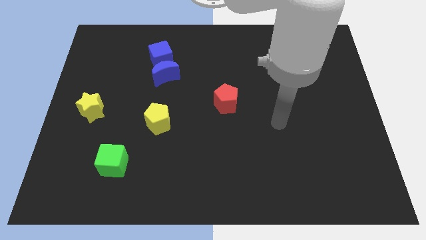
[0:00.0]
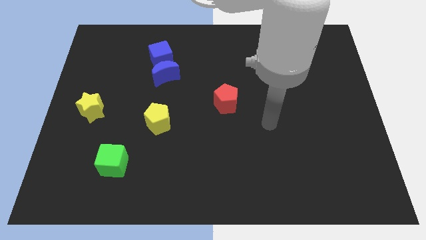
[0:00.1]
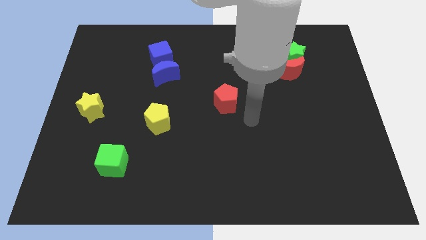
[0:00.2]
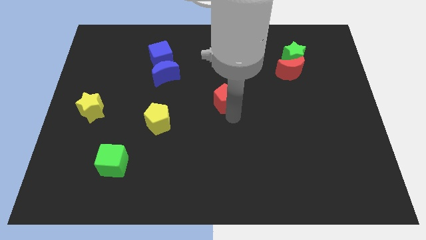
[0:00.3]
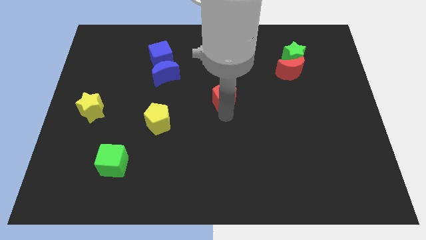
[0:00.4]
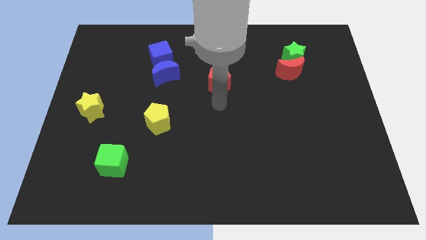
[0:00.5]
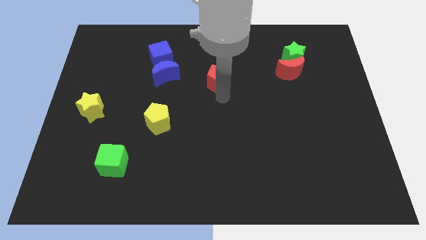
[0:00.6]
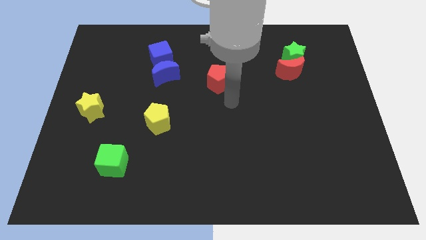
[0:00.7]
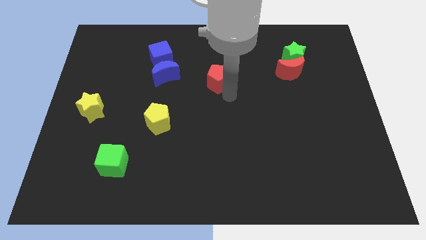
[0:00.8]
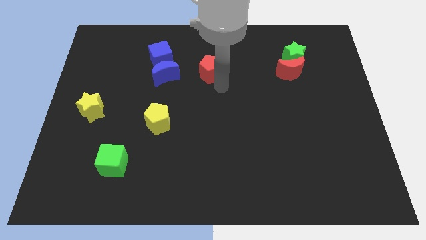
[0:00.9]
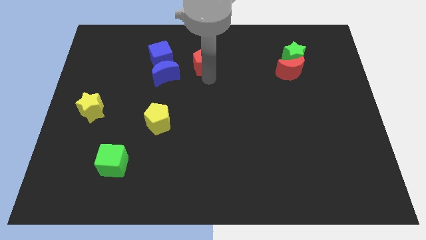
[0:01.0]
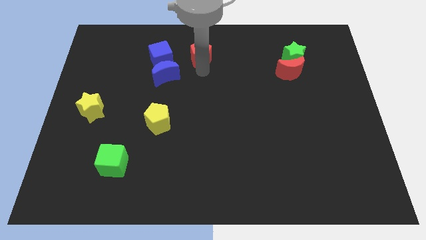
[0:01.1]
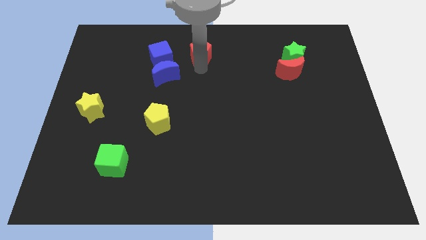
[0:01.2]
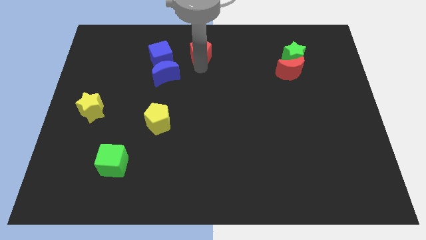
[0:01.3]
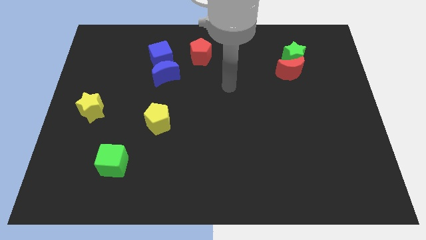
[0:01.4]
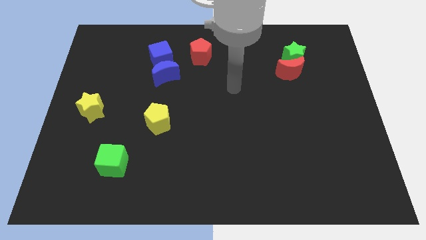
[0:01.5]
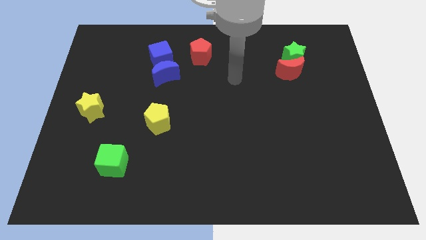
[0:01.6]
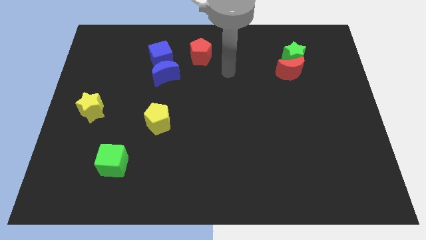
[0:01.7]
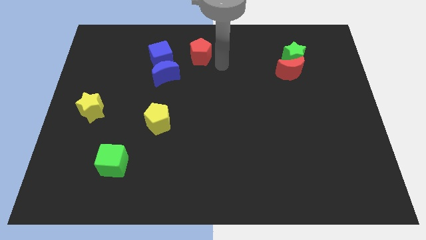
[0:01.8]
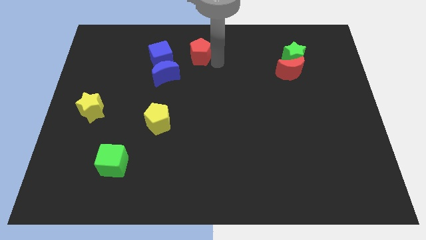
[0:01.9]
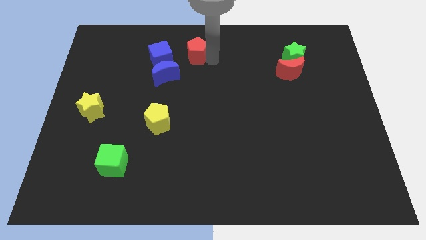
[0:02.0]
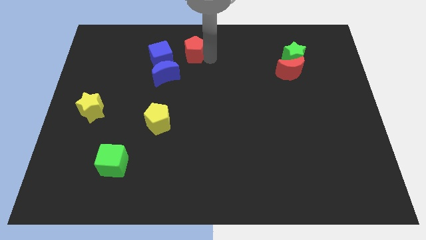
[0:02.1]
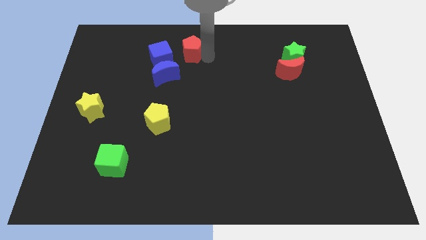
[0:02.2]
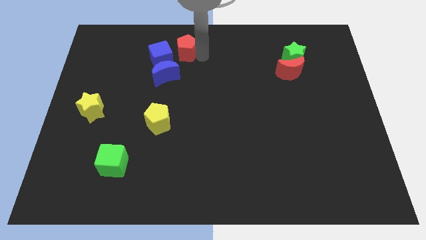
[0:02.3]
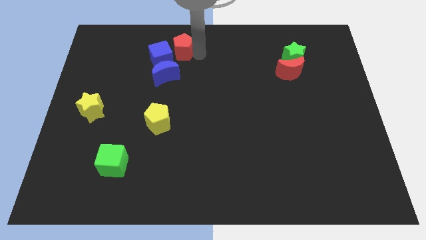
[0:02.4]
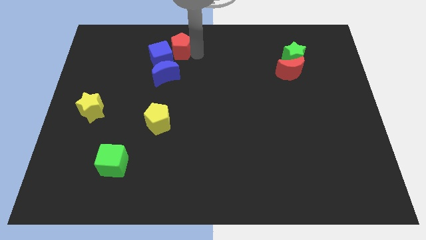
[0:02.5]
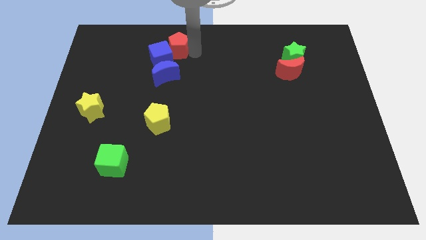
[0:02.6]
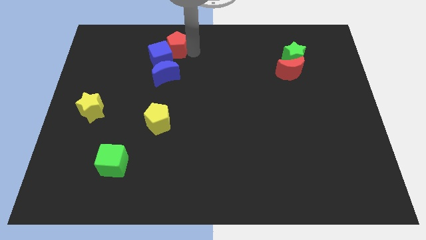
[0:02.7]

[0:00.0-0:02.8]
slide the red pentagon next to the blue cube

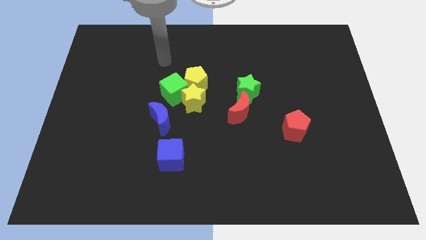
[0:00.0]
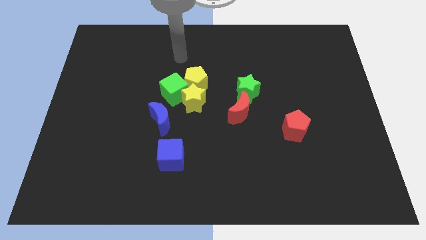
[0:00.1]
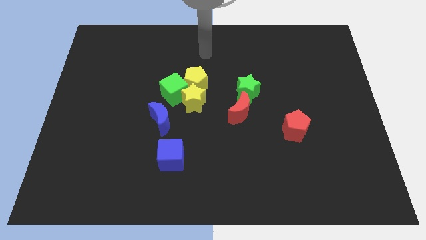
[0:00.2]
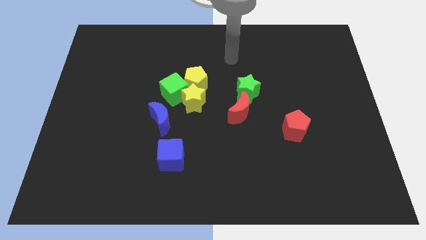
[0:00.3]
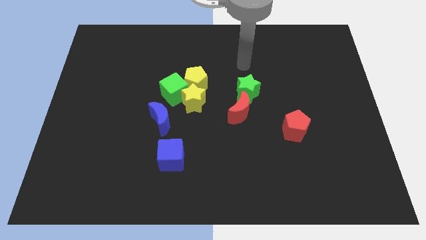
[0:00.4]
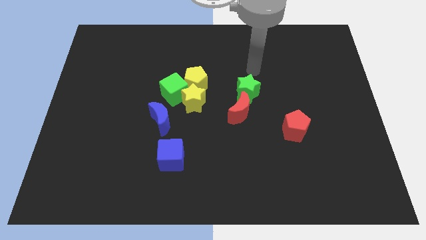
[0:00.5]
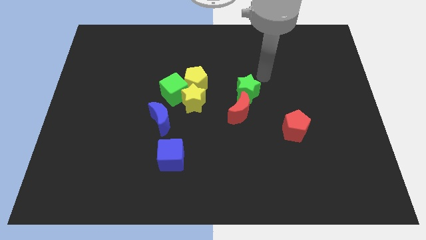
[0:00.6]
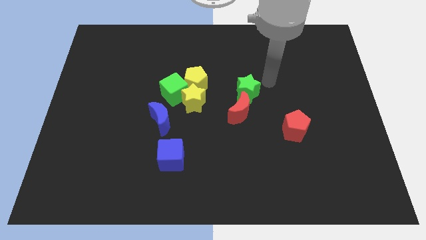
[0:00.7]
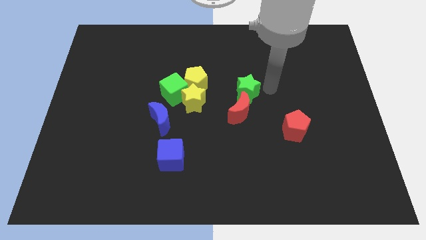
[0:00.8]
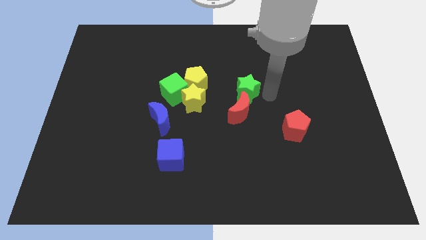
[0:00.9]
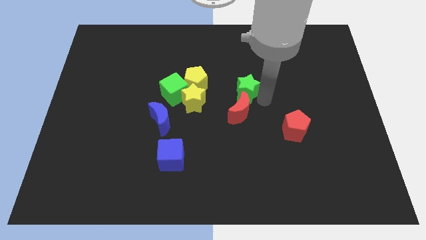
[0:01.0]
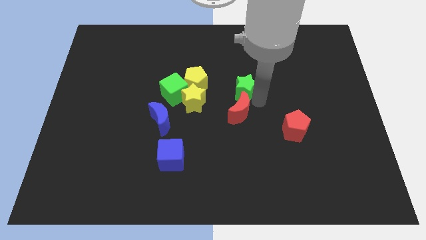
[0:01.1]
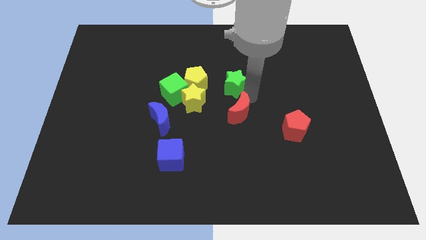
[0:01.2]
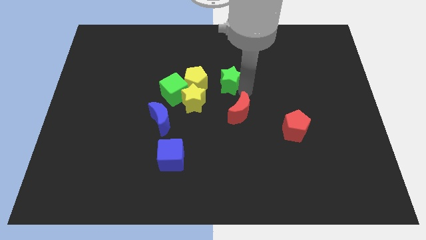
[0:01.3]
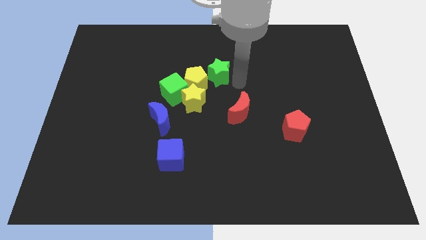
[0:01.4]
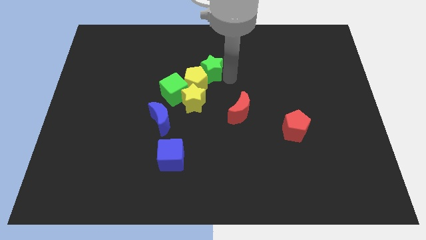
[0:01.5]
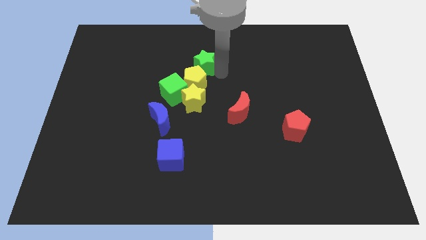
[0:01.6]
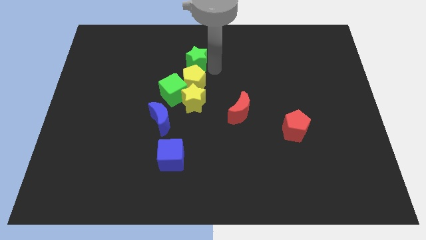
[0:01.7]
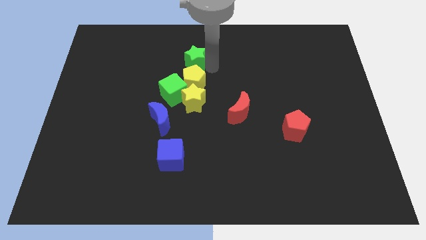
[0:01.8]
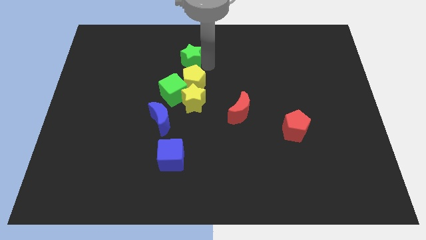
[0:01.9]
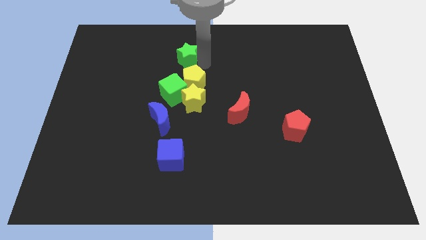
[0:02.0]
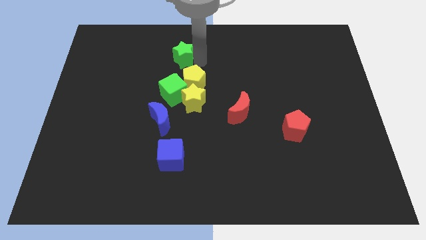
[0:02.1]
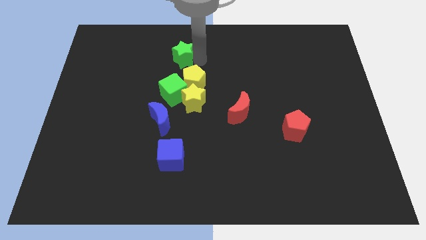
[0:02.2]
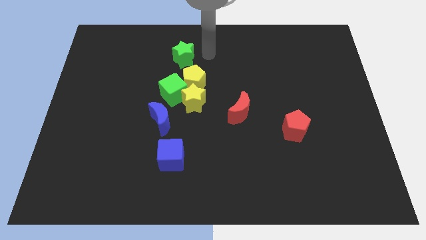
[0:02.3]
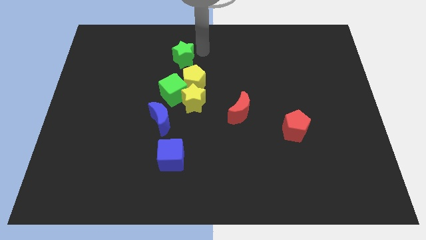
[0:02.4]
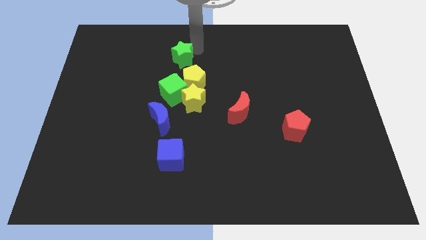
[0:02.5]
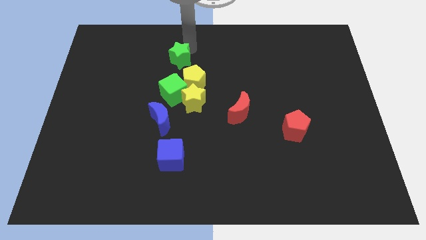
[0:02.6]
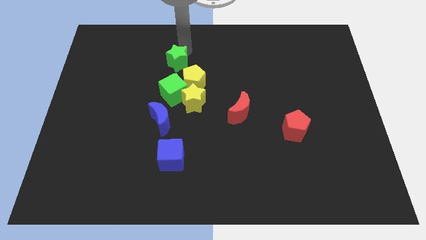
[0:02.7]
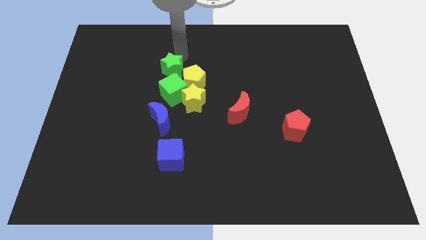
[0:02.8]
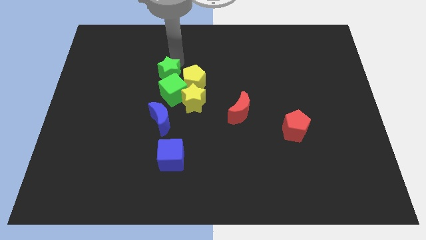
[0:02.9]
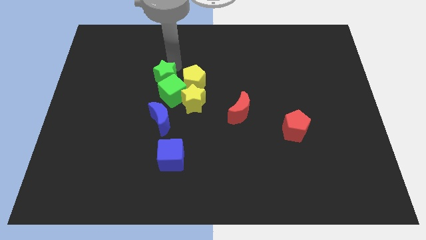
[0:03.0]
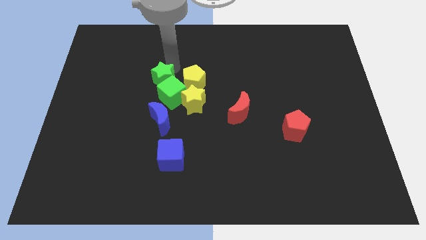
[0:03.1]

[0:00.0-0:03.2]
put the green star close to the green cube

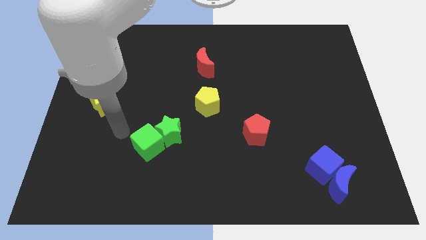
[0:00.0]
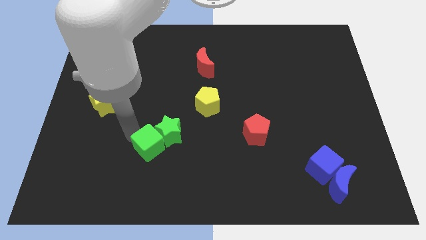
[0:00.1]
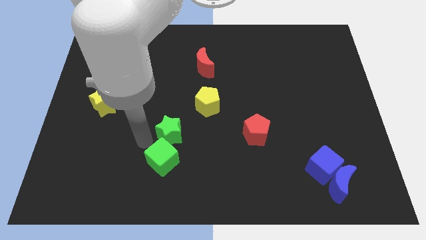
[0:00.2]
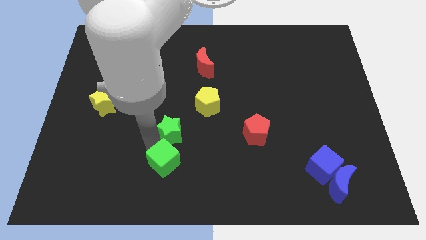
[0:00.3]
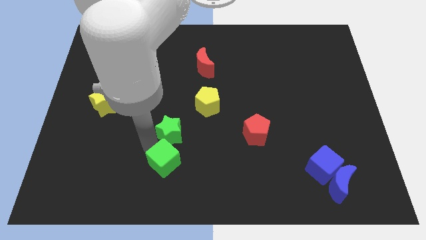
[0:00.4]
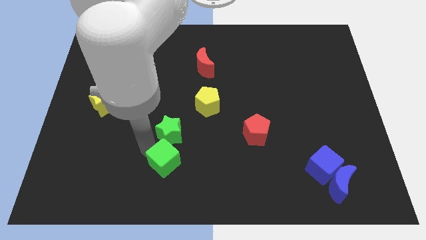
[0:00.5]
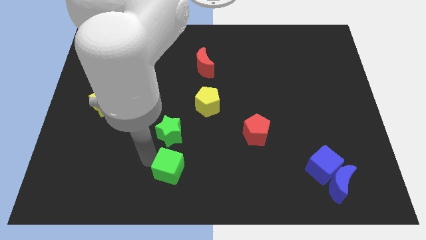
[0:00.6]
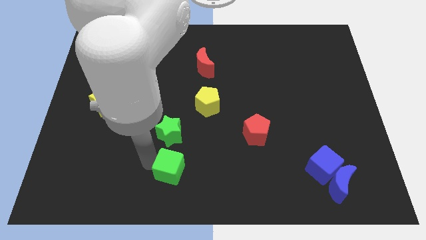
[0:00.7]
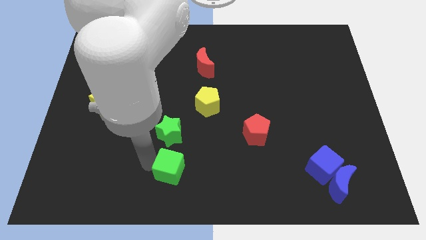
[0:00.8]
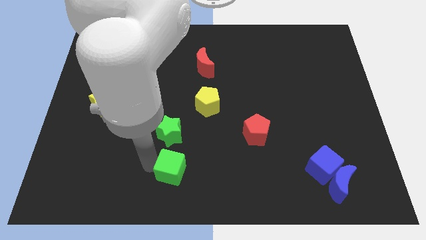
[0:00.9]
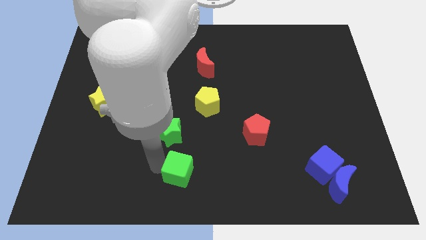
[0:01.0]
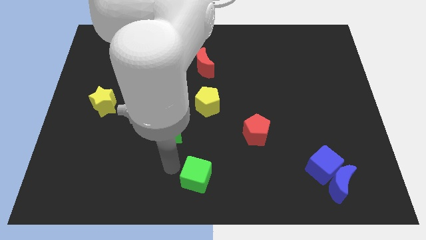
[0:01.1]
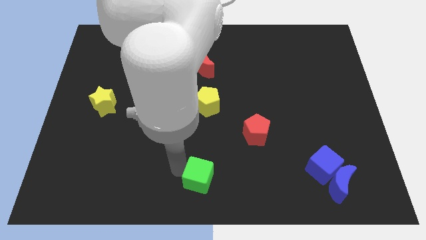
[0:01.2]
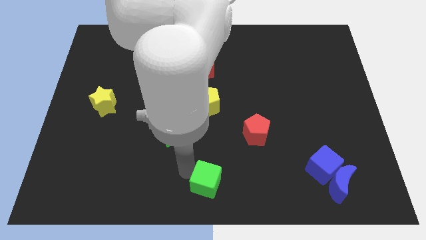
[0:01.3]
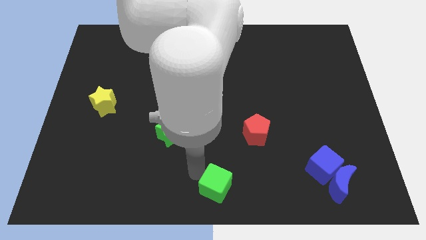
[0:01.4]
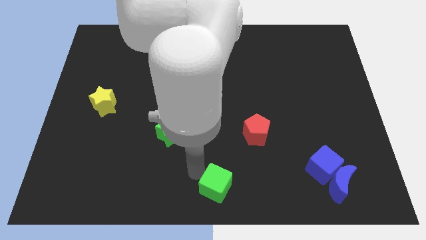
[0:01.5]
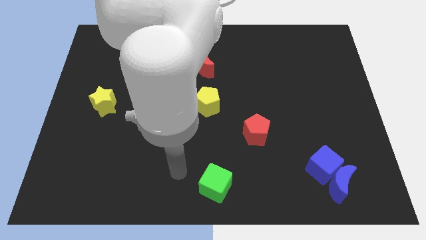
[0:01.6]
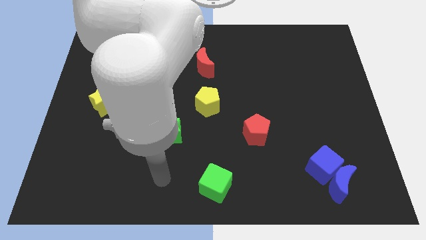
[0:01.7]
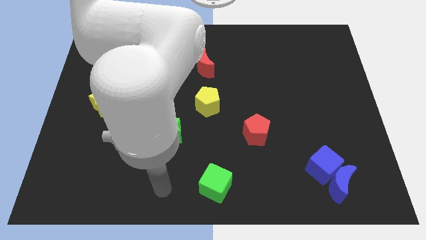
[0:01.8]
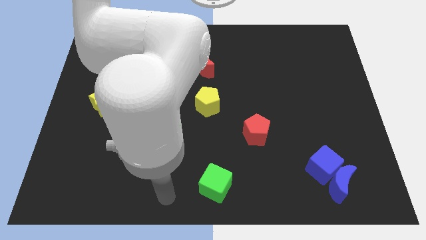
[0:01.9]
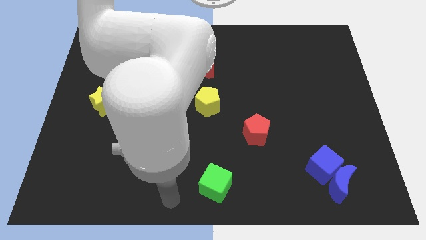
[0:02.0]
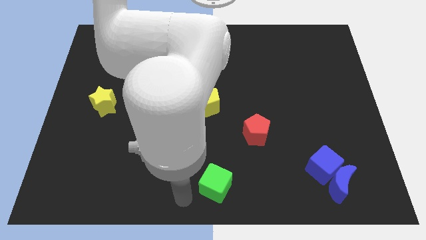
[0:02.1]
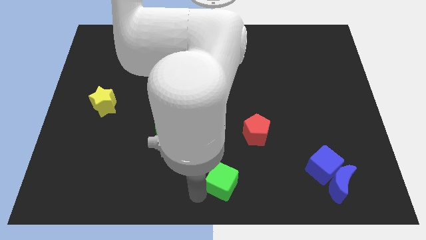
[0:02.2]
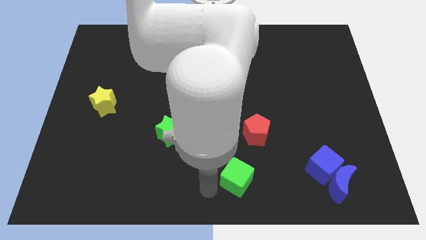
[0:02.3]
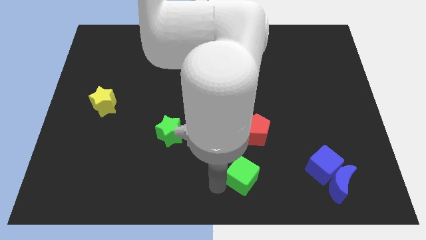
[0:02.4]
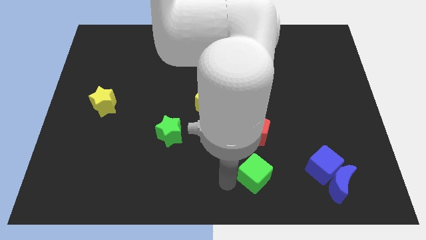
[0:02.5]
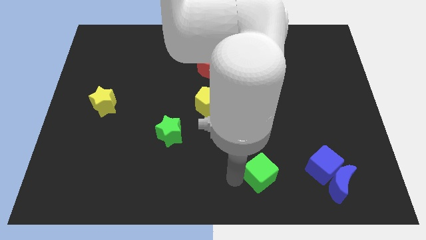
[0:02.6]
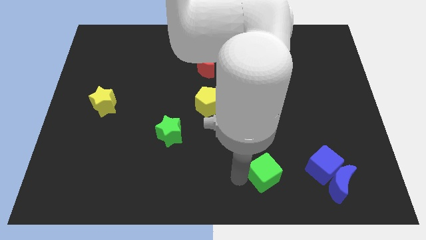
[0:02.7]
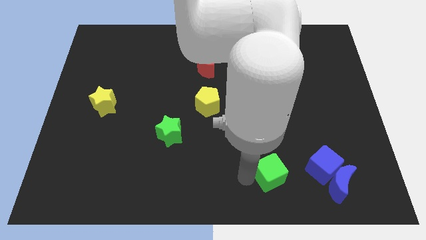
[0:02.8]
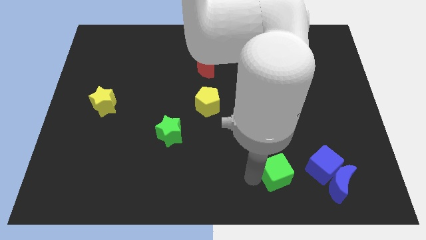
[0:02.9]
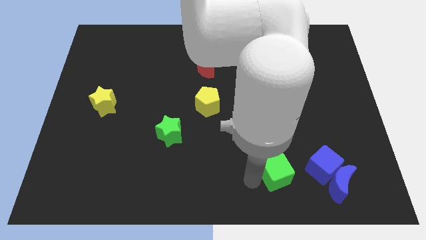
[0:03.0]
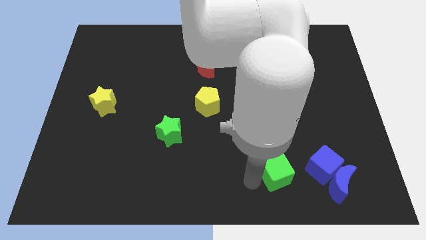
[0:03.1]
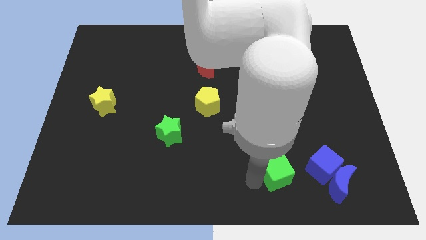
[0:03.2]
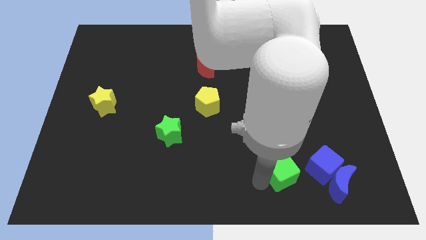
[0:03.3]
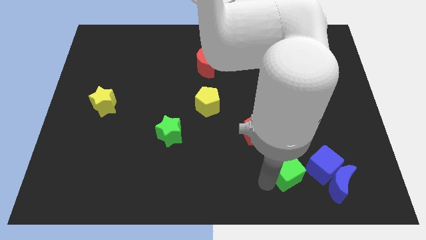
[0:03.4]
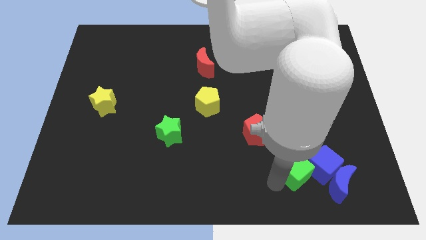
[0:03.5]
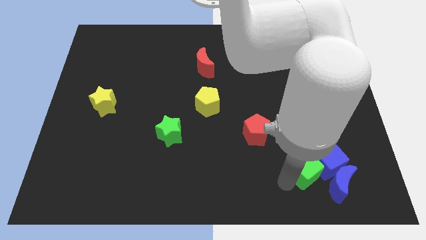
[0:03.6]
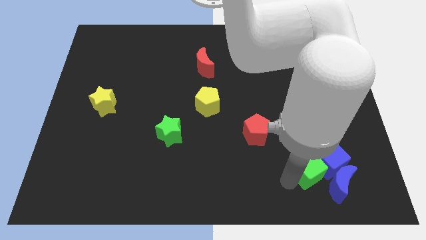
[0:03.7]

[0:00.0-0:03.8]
move the green cube to the blue cube
